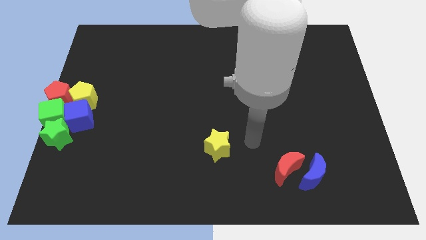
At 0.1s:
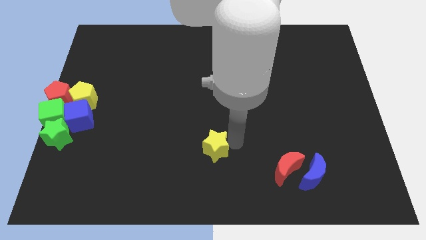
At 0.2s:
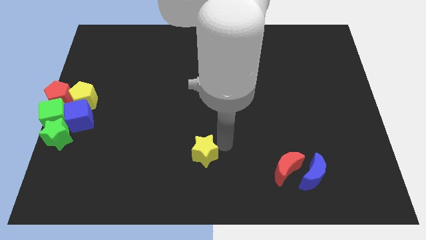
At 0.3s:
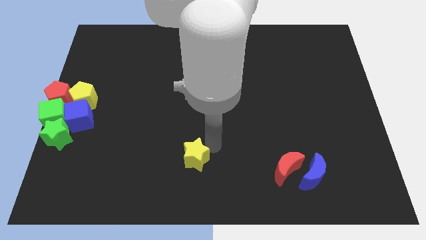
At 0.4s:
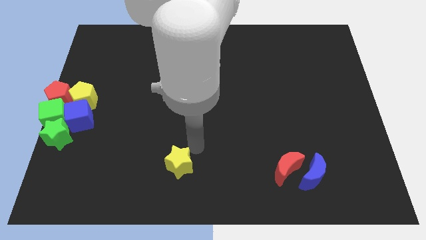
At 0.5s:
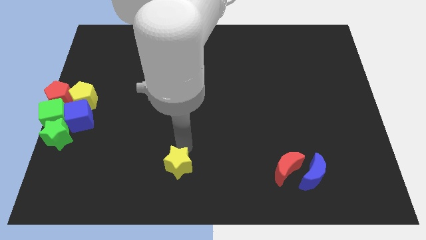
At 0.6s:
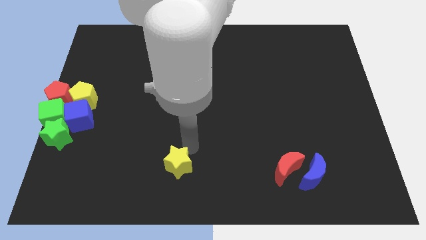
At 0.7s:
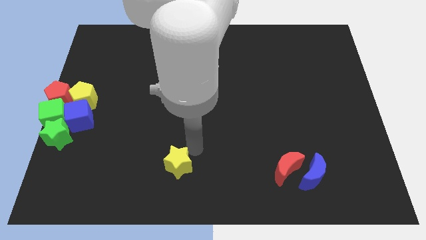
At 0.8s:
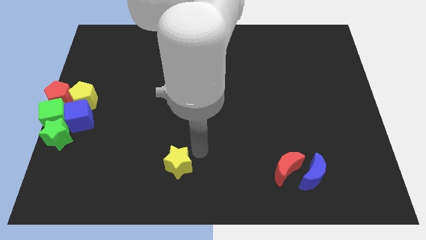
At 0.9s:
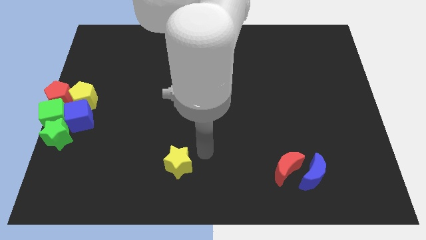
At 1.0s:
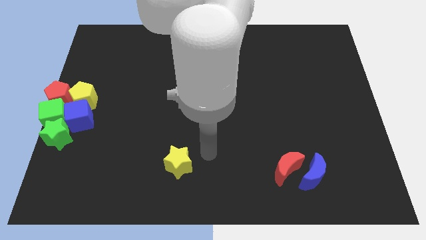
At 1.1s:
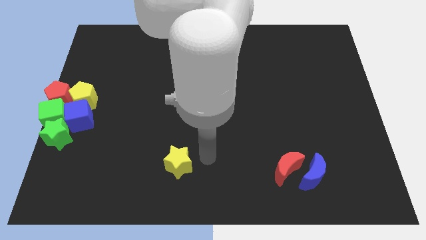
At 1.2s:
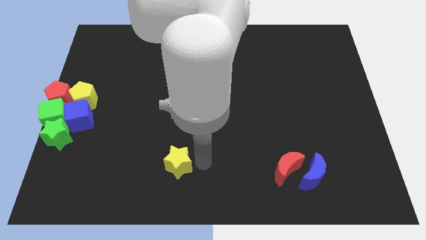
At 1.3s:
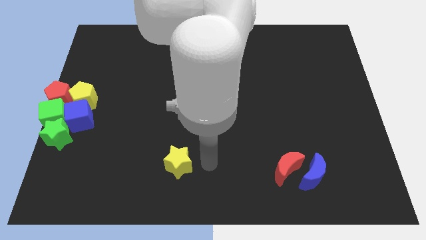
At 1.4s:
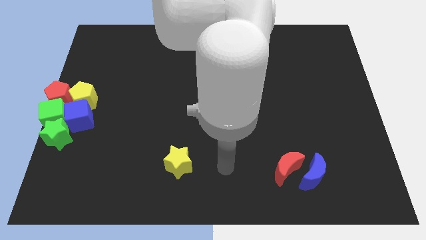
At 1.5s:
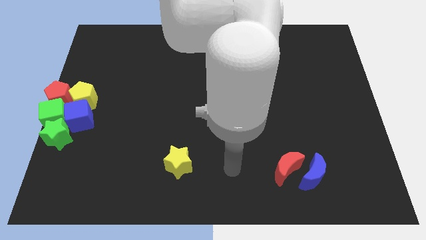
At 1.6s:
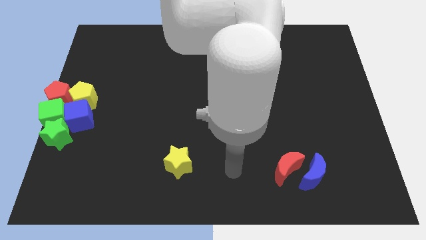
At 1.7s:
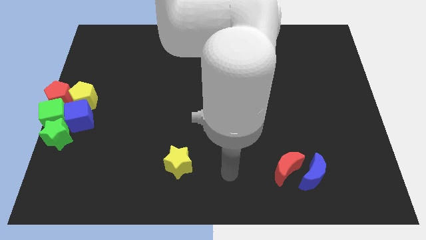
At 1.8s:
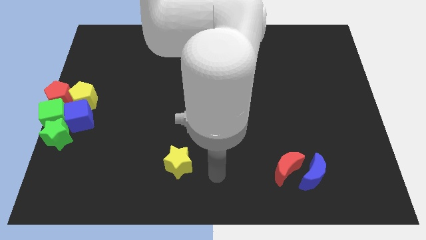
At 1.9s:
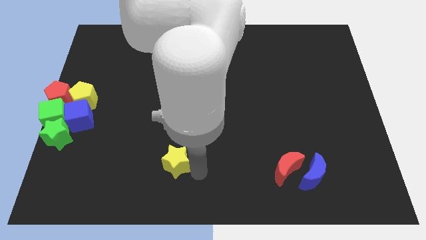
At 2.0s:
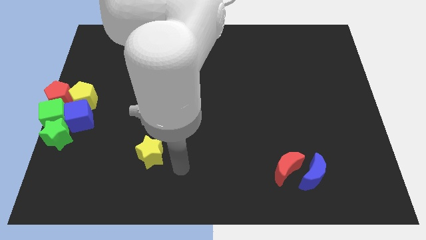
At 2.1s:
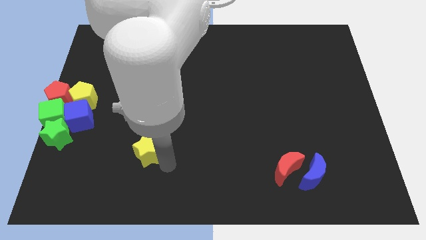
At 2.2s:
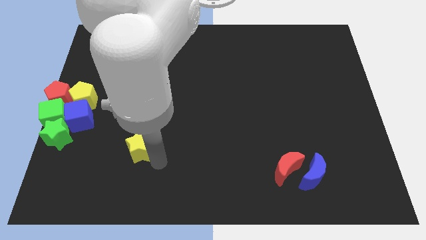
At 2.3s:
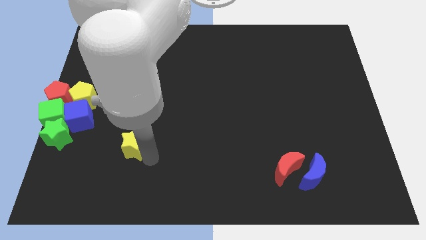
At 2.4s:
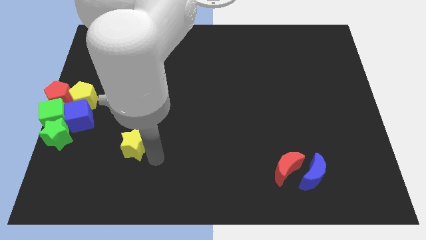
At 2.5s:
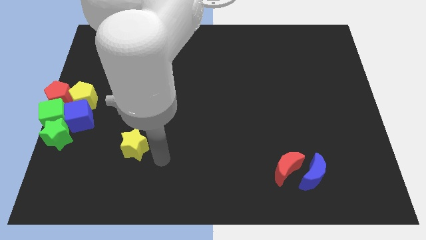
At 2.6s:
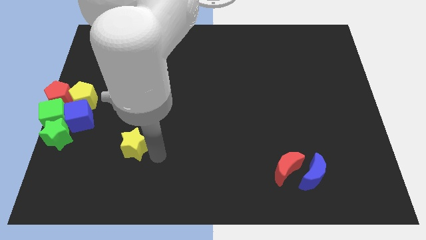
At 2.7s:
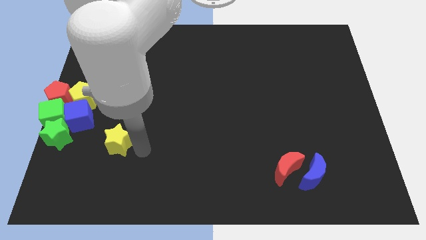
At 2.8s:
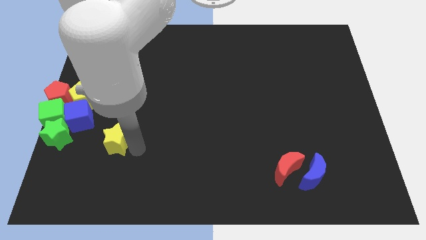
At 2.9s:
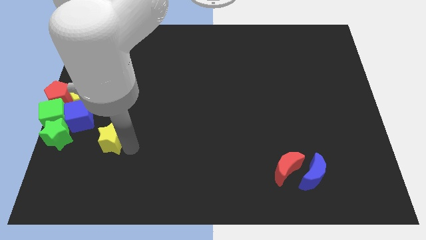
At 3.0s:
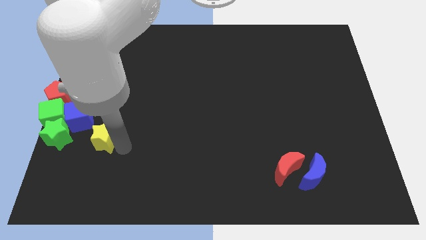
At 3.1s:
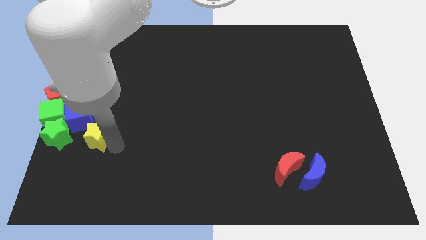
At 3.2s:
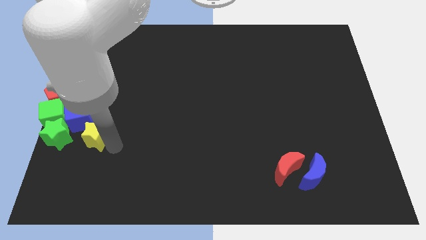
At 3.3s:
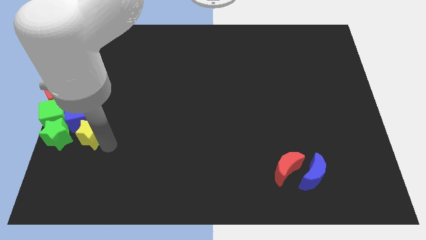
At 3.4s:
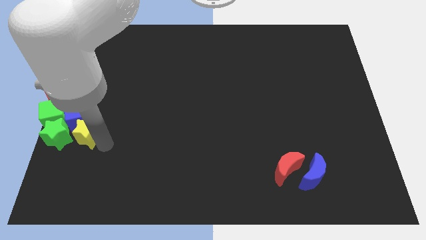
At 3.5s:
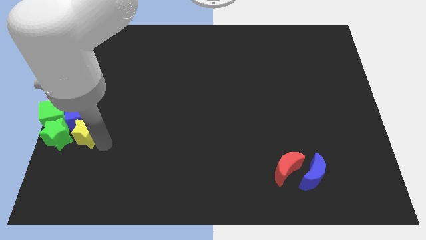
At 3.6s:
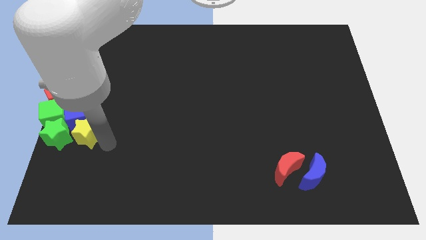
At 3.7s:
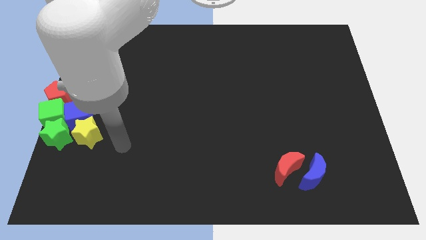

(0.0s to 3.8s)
place yellow star to the bottom of blue cube

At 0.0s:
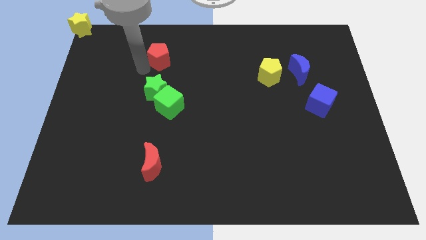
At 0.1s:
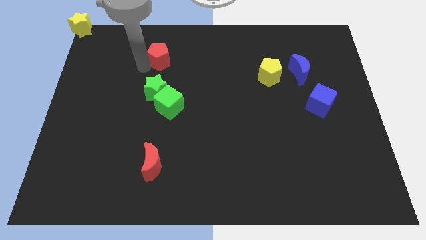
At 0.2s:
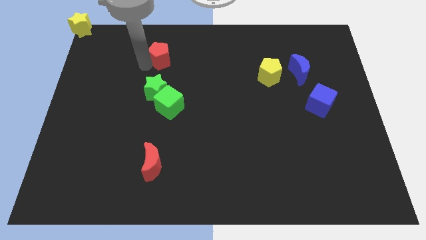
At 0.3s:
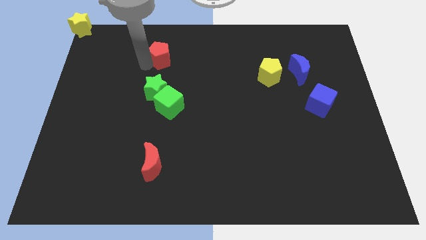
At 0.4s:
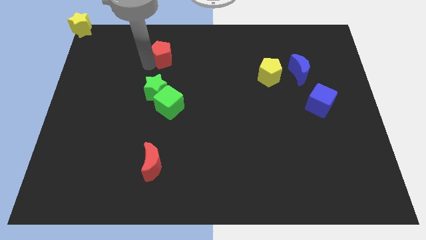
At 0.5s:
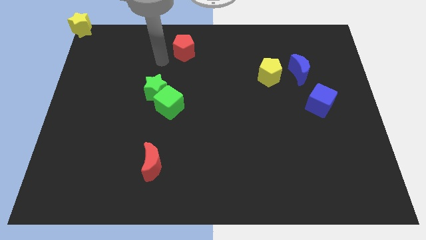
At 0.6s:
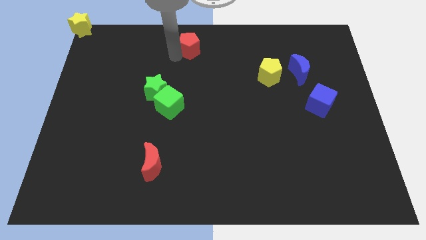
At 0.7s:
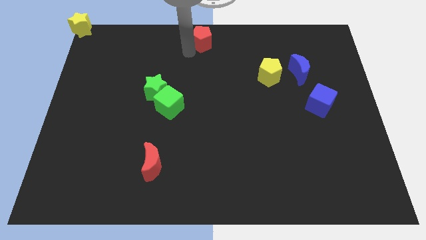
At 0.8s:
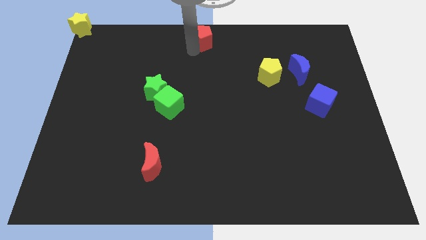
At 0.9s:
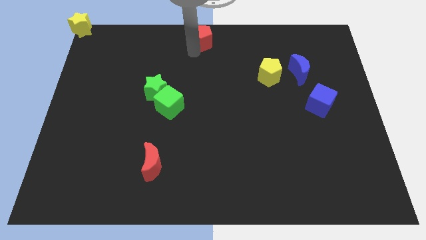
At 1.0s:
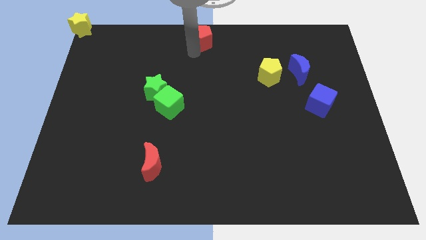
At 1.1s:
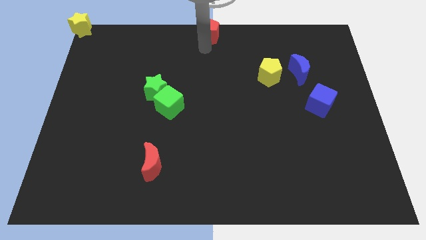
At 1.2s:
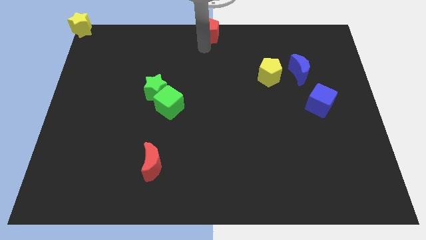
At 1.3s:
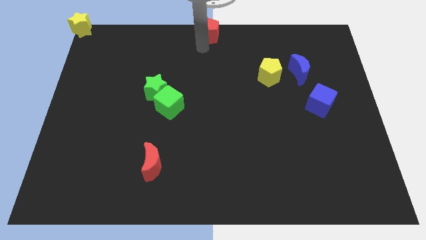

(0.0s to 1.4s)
move the red pentagon horizontally to the right side of the yellow star

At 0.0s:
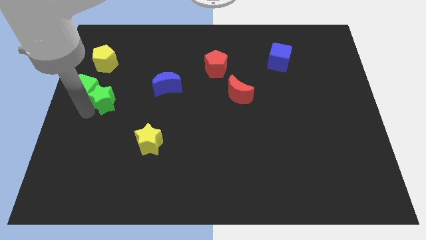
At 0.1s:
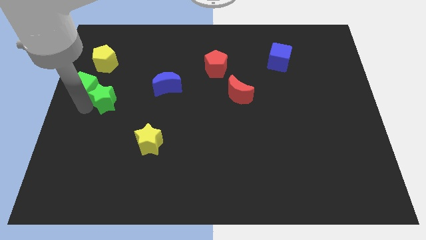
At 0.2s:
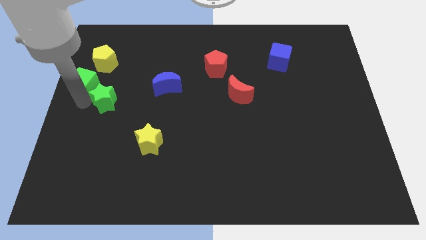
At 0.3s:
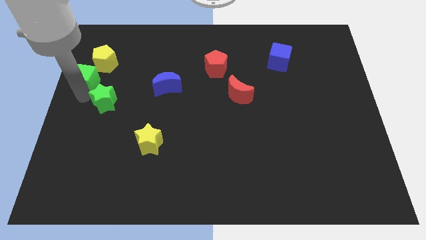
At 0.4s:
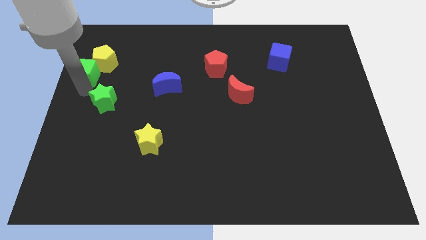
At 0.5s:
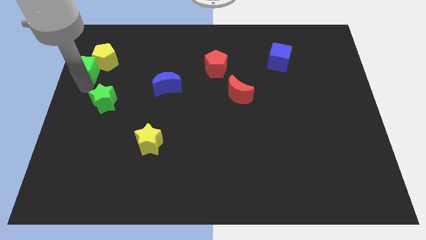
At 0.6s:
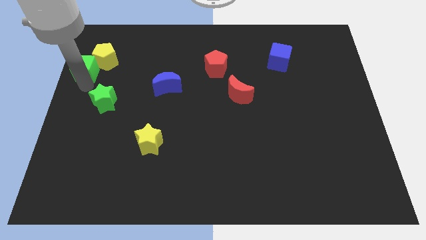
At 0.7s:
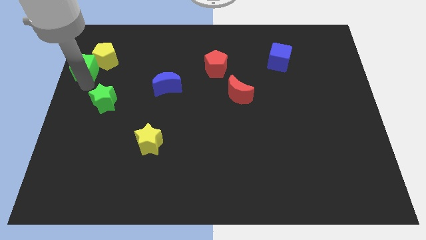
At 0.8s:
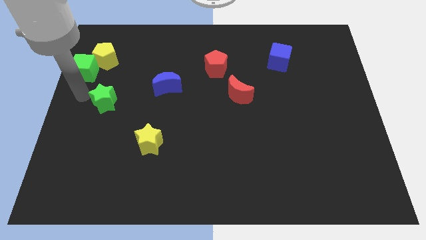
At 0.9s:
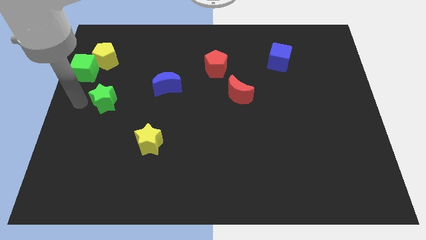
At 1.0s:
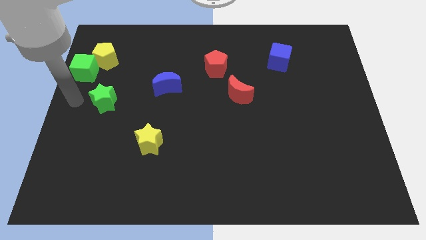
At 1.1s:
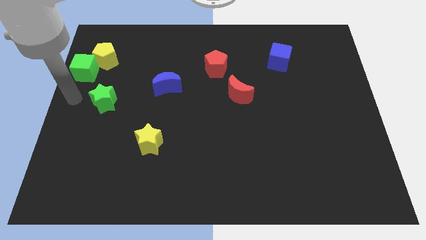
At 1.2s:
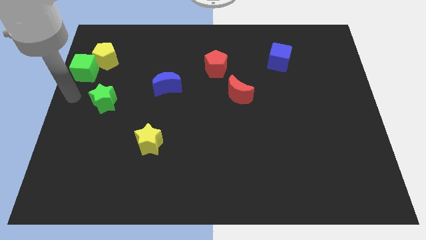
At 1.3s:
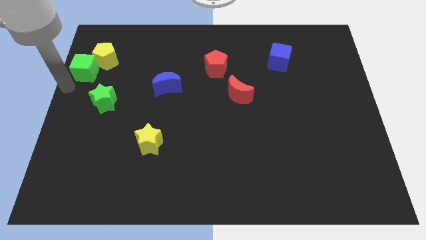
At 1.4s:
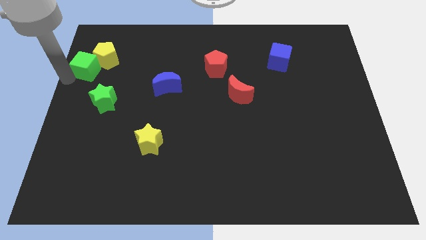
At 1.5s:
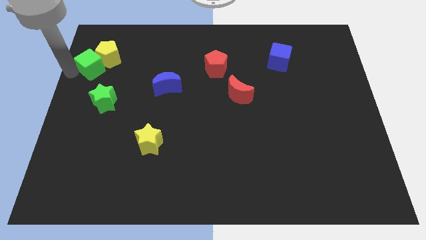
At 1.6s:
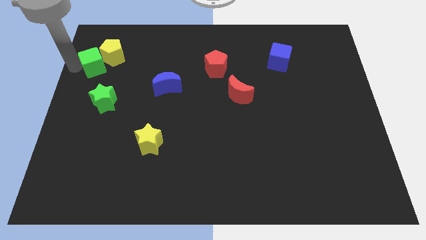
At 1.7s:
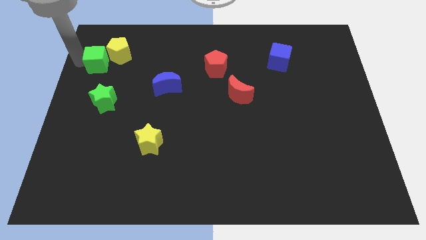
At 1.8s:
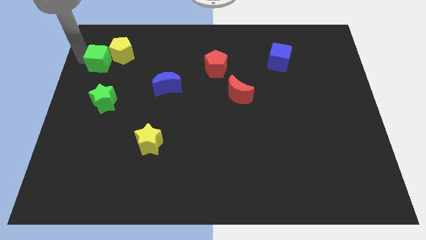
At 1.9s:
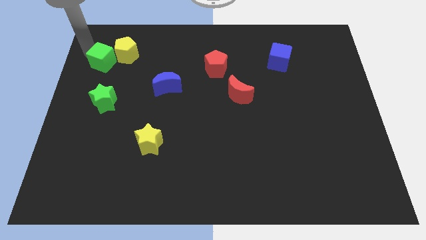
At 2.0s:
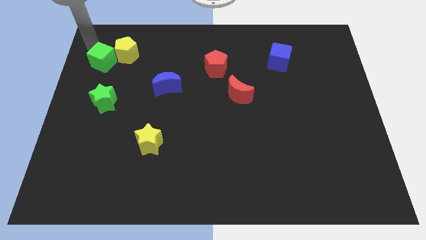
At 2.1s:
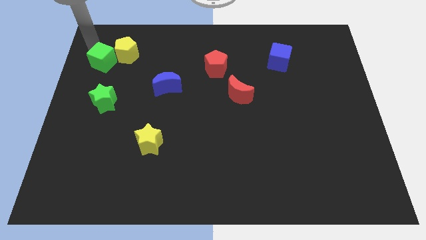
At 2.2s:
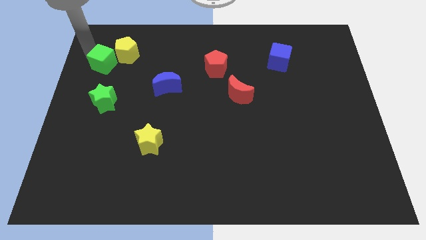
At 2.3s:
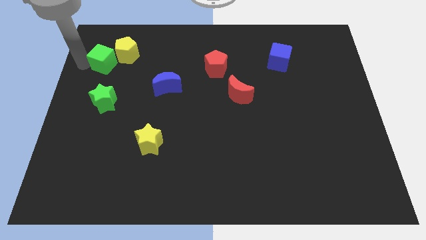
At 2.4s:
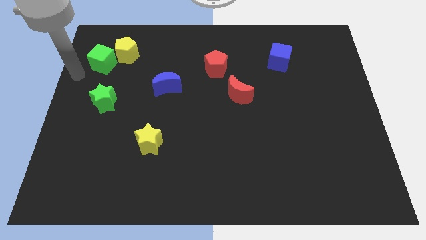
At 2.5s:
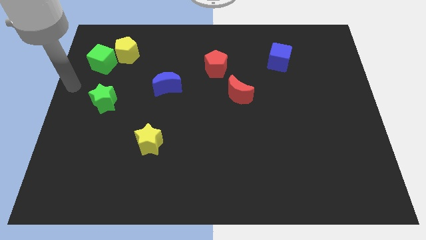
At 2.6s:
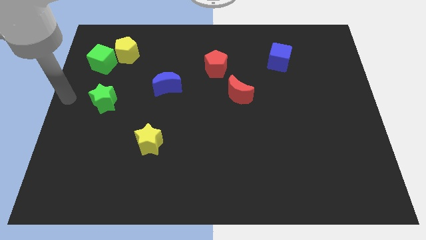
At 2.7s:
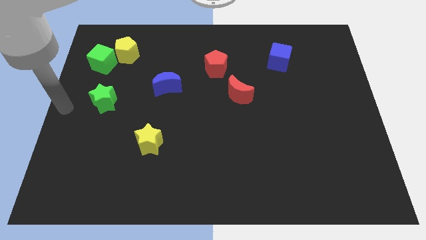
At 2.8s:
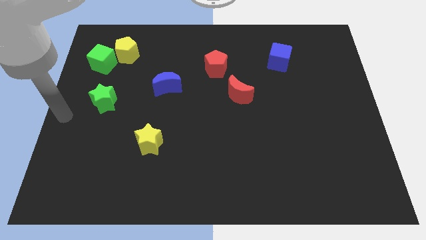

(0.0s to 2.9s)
push the green cube into the left of the yellow pentagon

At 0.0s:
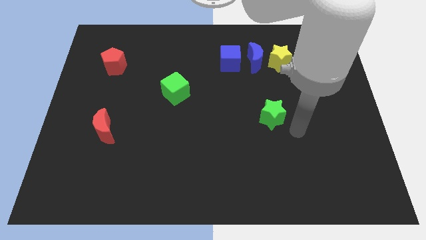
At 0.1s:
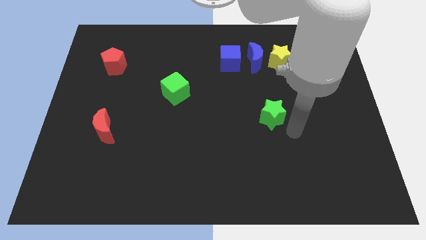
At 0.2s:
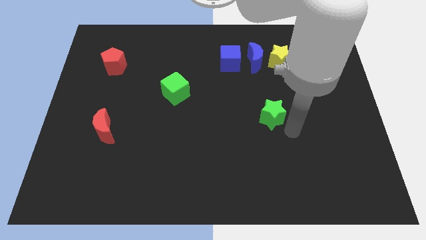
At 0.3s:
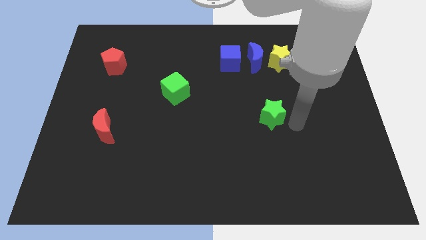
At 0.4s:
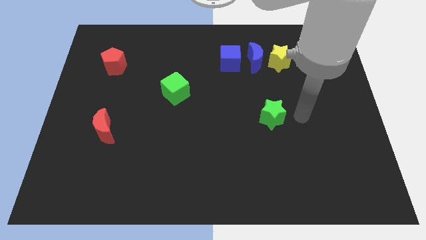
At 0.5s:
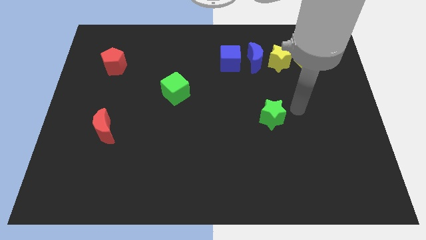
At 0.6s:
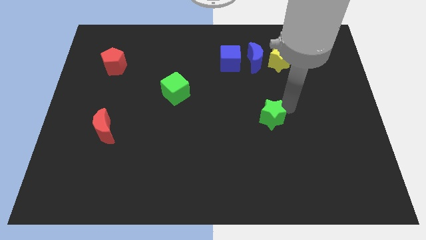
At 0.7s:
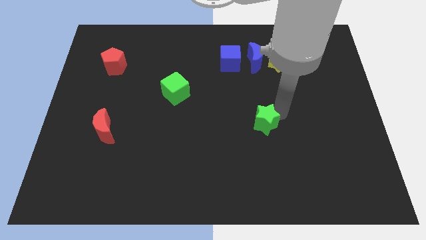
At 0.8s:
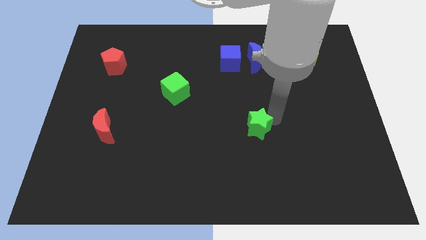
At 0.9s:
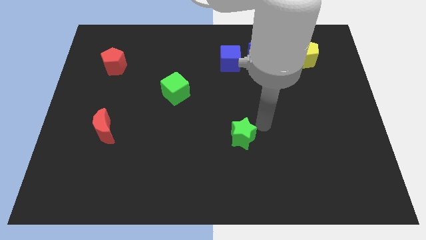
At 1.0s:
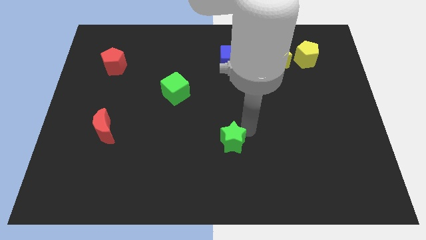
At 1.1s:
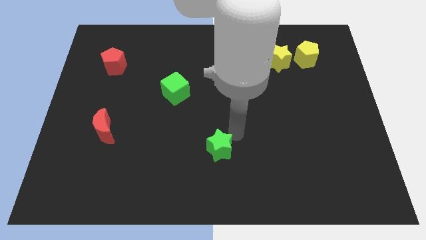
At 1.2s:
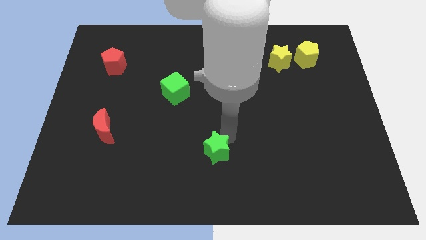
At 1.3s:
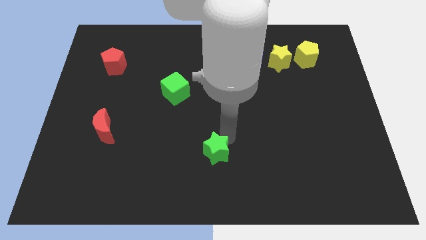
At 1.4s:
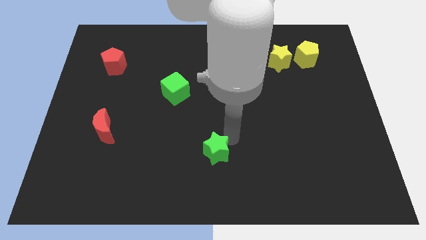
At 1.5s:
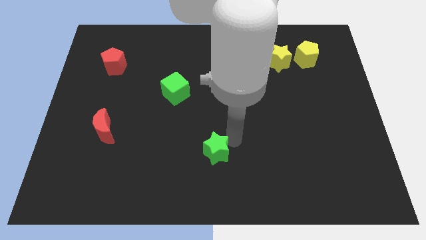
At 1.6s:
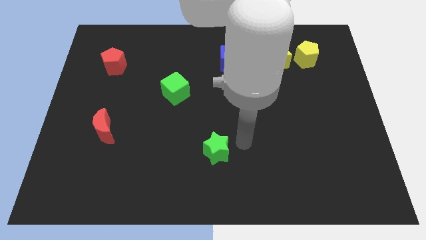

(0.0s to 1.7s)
place the green star diagonally to the green cube
